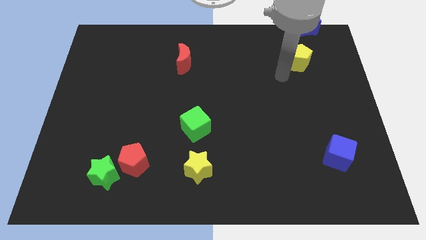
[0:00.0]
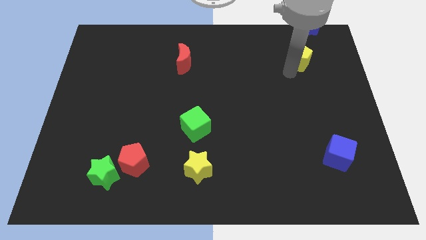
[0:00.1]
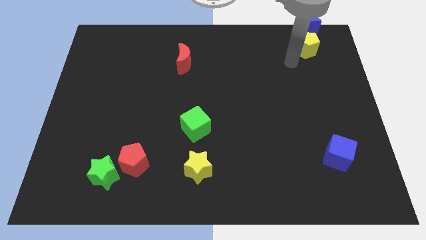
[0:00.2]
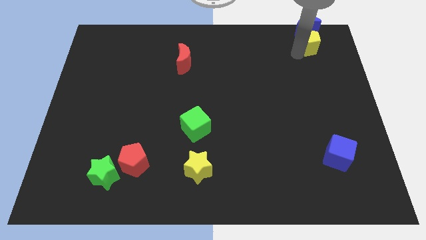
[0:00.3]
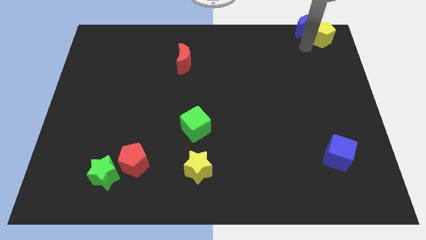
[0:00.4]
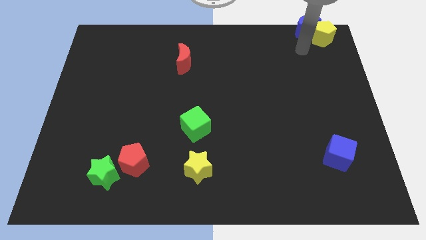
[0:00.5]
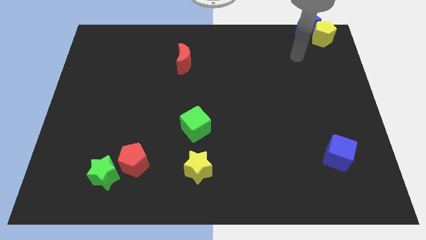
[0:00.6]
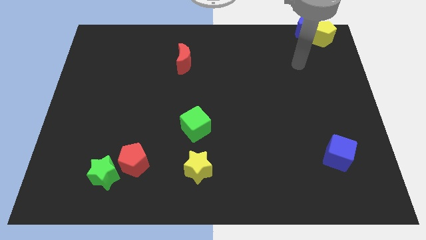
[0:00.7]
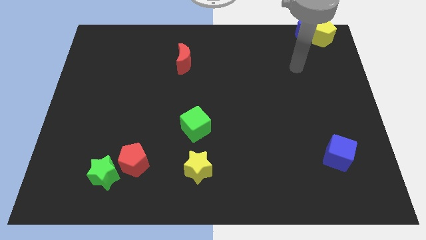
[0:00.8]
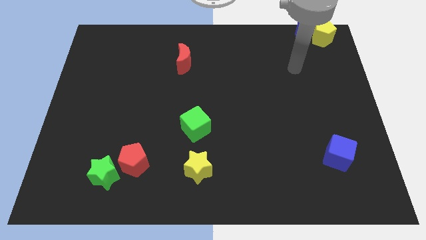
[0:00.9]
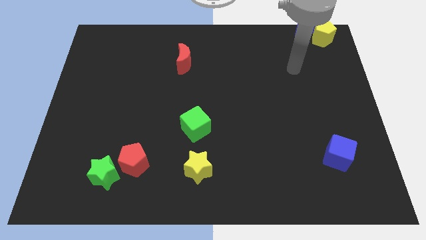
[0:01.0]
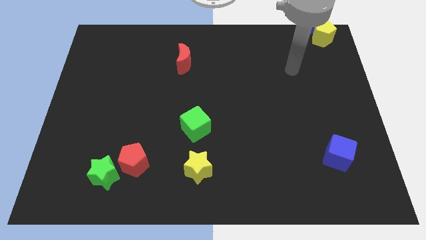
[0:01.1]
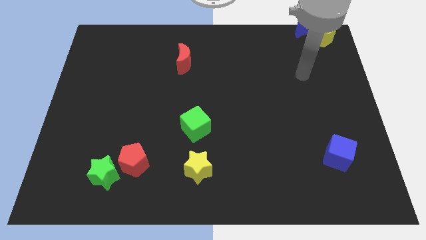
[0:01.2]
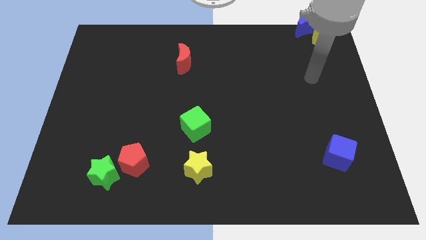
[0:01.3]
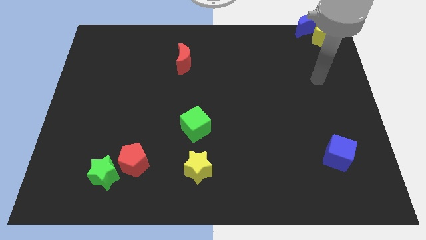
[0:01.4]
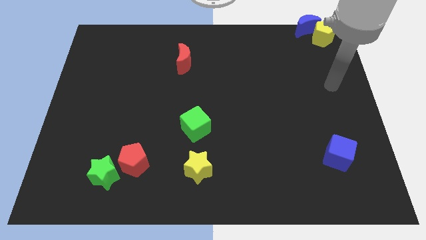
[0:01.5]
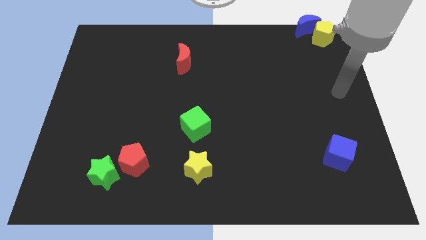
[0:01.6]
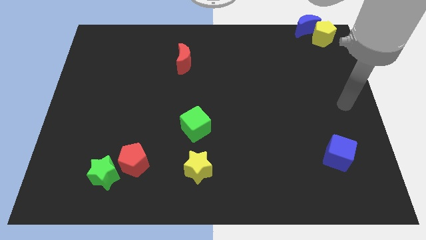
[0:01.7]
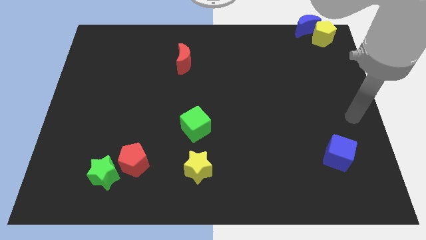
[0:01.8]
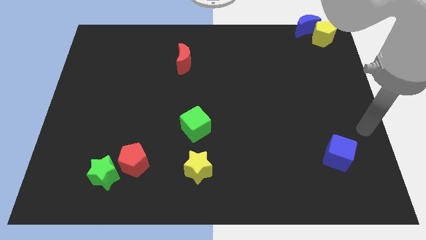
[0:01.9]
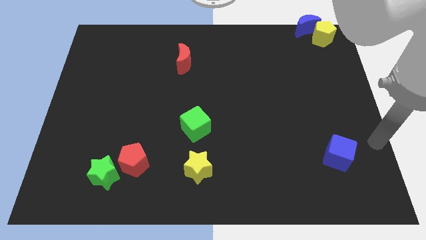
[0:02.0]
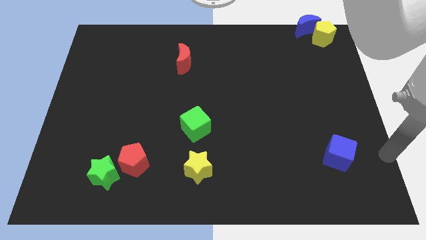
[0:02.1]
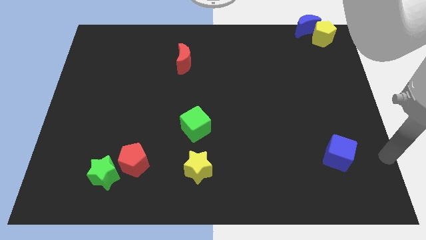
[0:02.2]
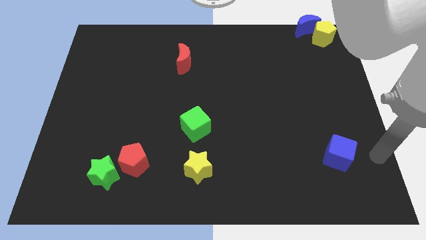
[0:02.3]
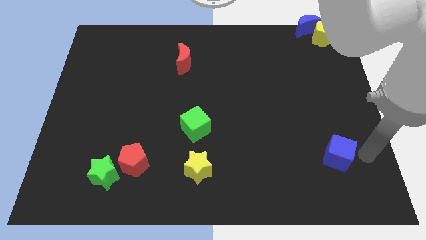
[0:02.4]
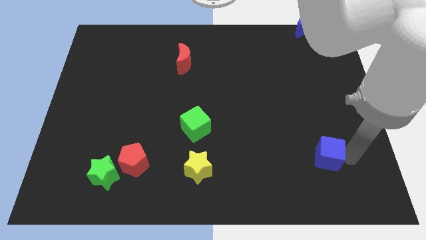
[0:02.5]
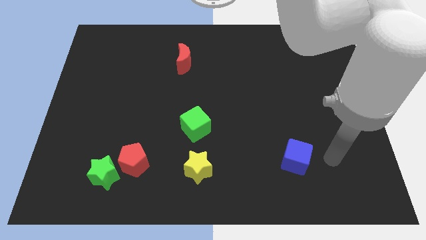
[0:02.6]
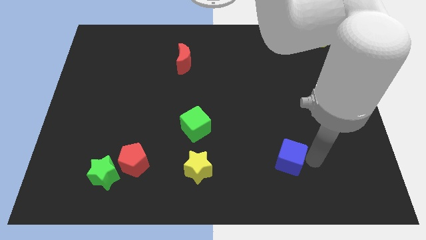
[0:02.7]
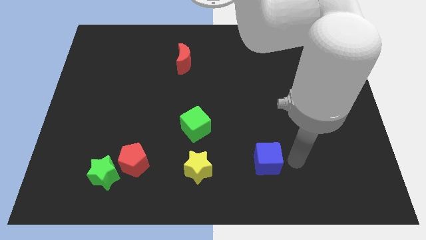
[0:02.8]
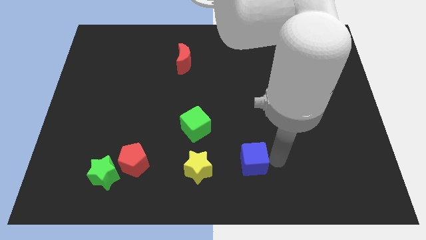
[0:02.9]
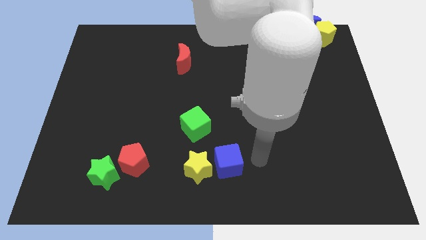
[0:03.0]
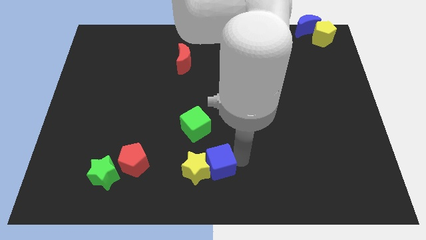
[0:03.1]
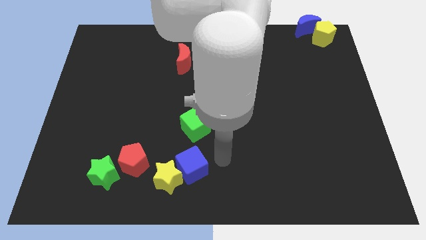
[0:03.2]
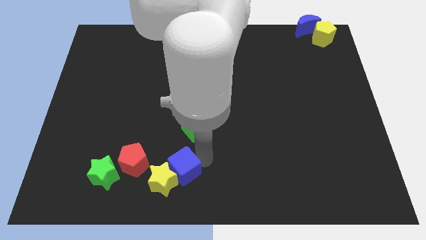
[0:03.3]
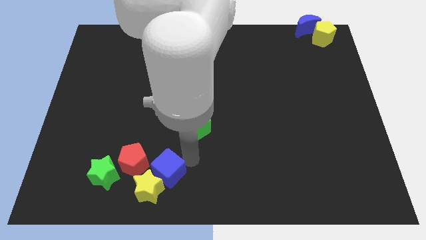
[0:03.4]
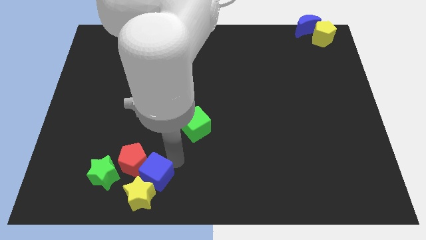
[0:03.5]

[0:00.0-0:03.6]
move blue cube diagonally above yellow star

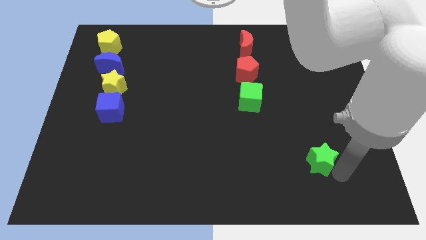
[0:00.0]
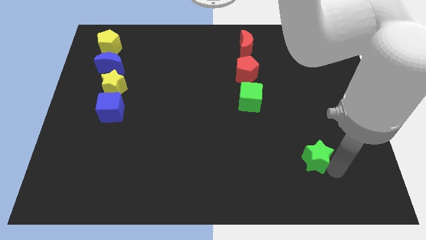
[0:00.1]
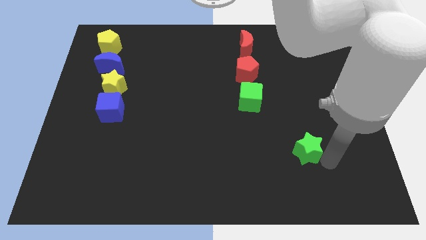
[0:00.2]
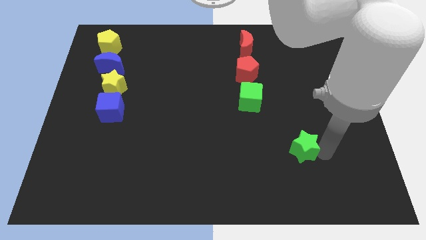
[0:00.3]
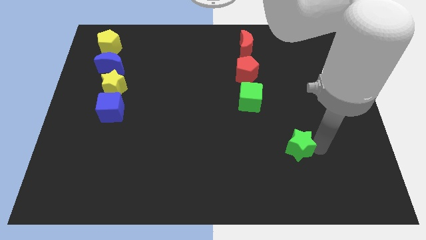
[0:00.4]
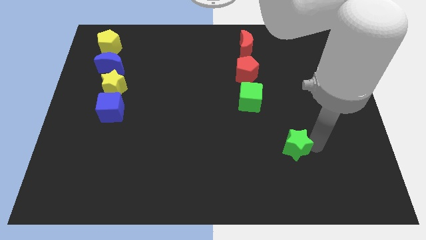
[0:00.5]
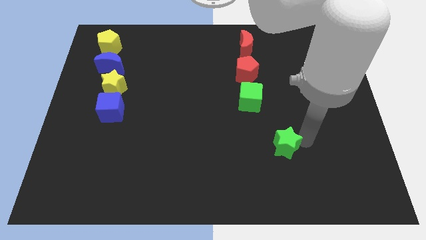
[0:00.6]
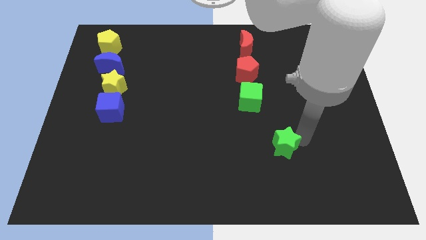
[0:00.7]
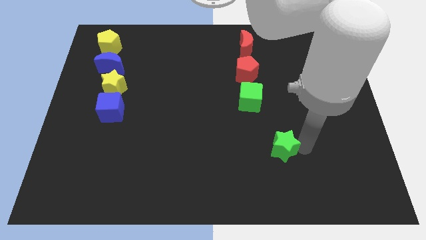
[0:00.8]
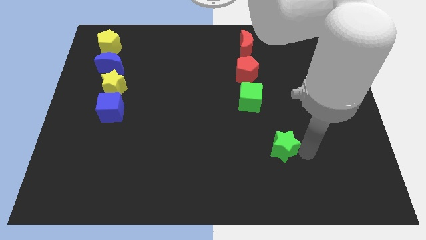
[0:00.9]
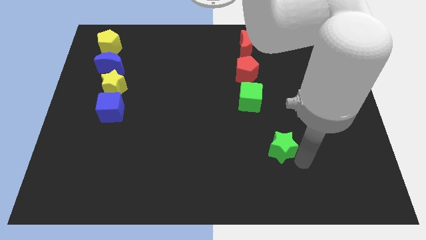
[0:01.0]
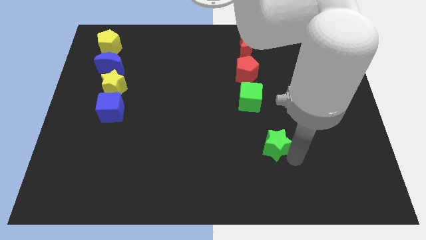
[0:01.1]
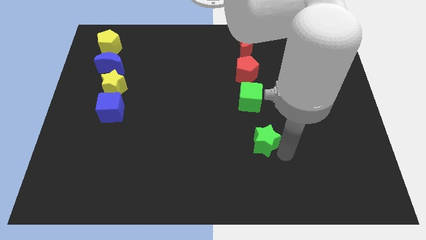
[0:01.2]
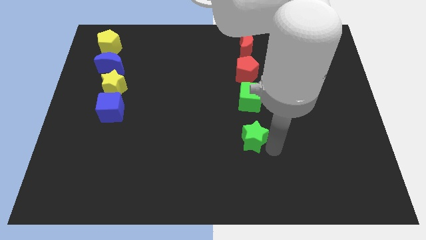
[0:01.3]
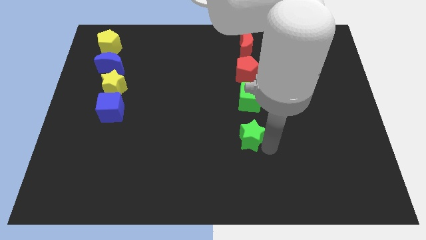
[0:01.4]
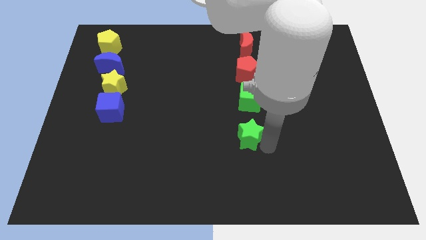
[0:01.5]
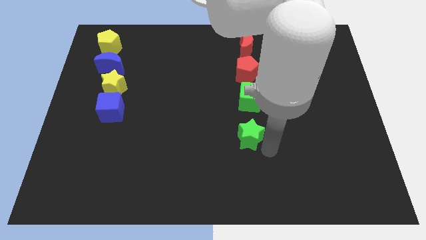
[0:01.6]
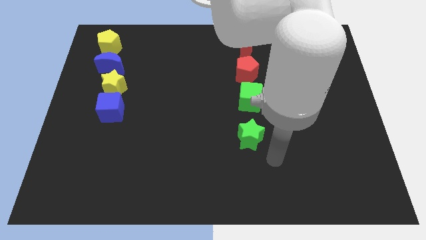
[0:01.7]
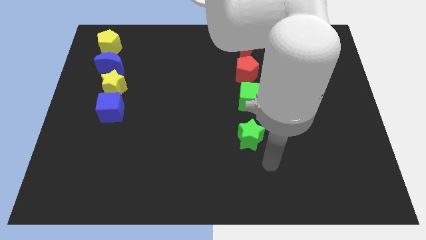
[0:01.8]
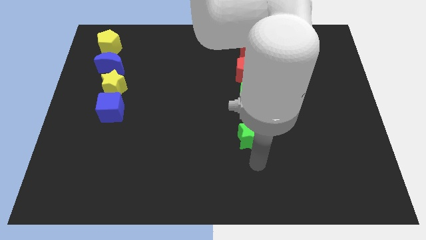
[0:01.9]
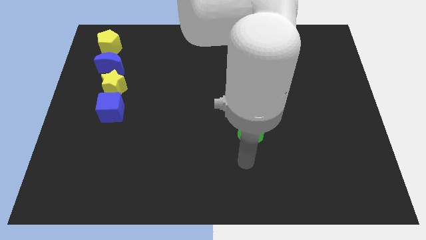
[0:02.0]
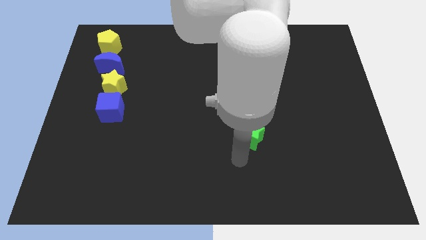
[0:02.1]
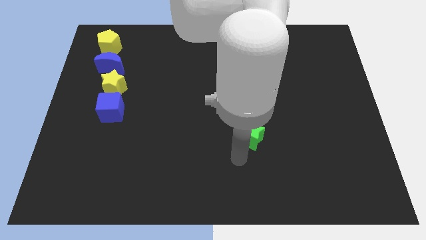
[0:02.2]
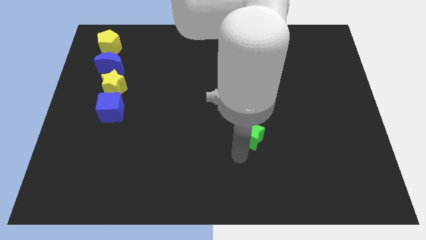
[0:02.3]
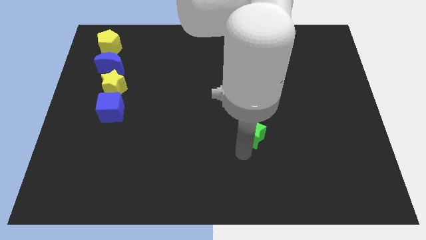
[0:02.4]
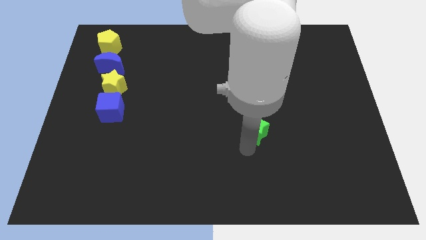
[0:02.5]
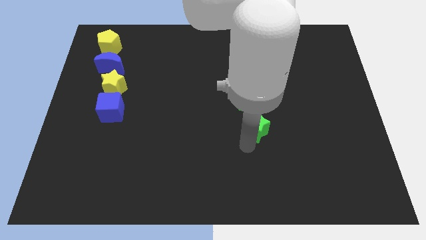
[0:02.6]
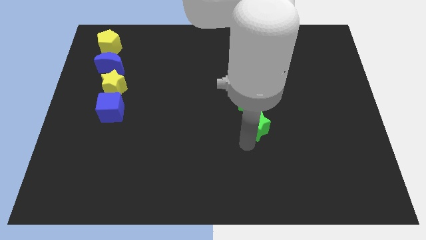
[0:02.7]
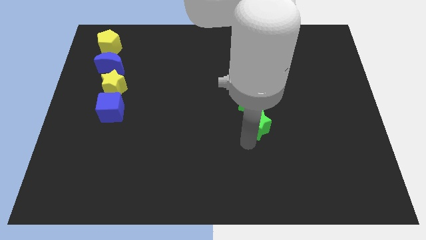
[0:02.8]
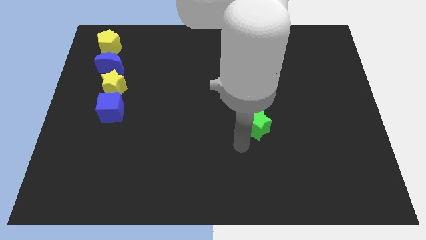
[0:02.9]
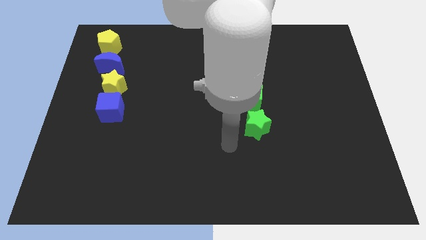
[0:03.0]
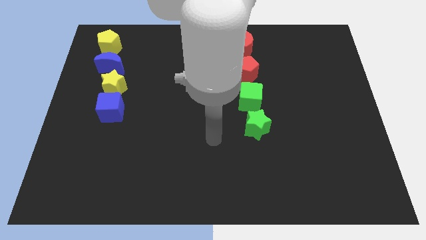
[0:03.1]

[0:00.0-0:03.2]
place the green star below the green cube

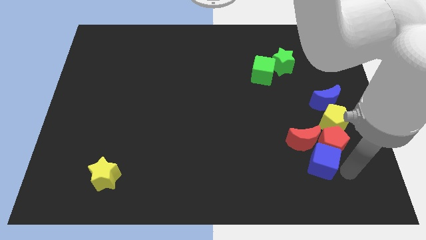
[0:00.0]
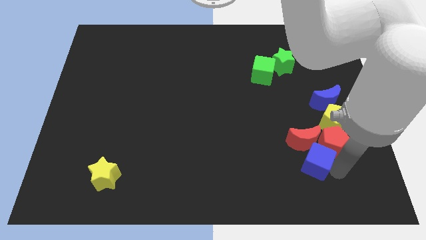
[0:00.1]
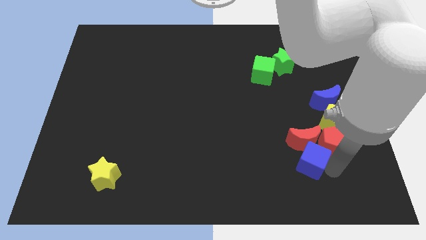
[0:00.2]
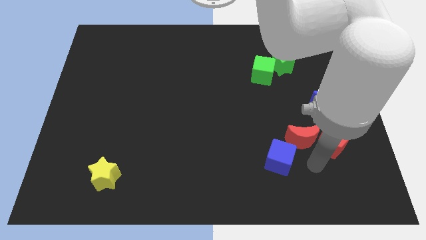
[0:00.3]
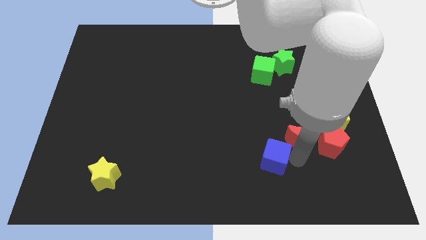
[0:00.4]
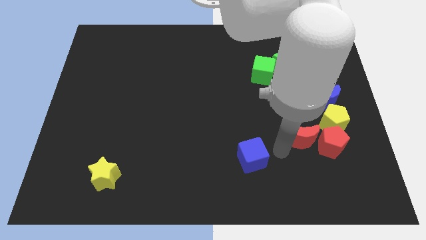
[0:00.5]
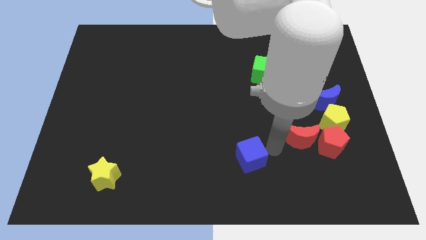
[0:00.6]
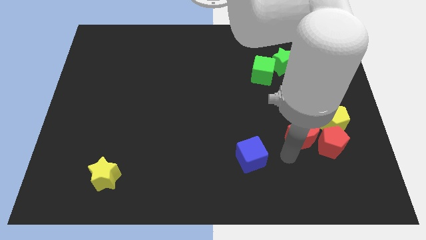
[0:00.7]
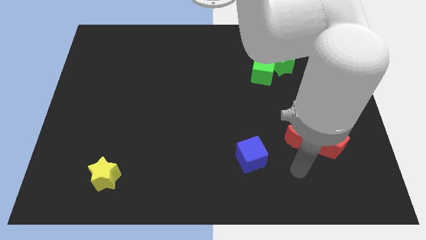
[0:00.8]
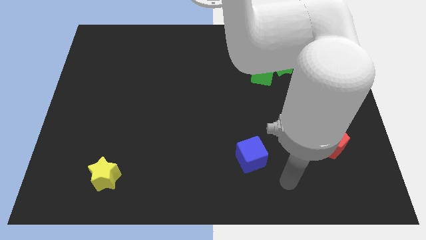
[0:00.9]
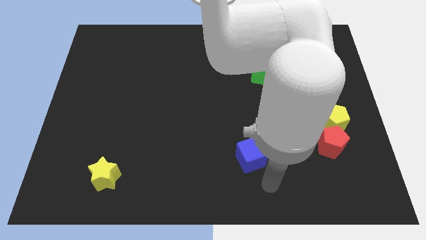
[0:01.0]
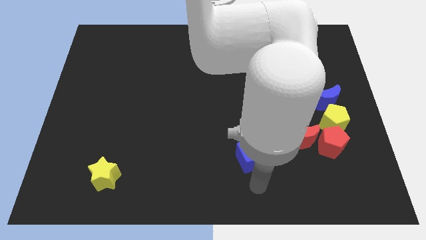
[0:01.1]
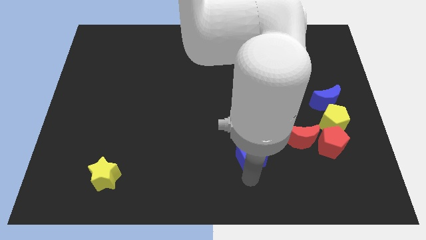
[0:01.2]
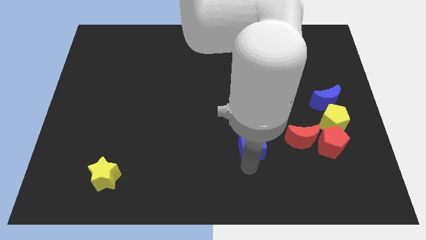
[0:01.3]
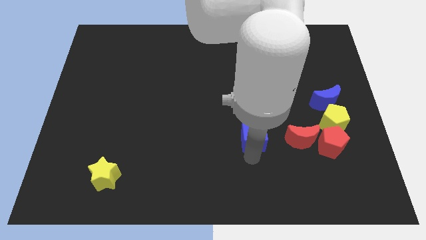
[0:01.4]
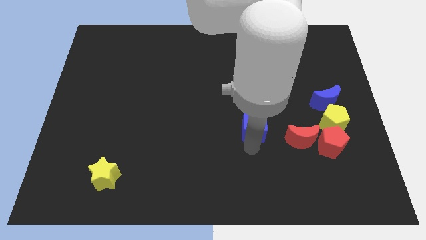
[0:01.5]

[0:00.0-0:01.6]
separate blue cube from the red pentagon

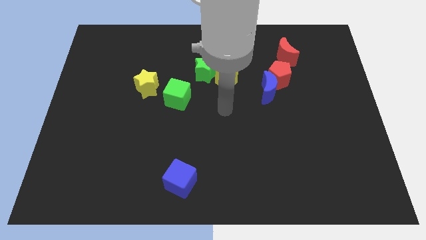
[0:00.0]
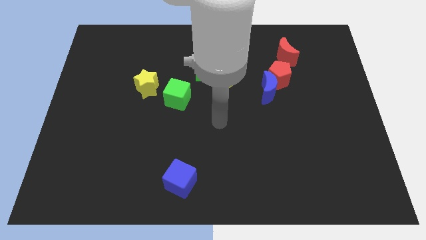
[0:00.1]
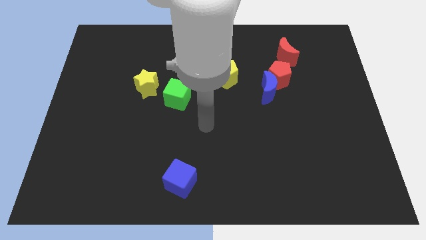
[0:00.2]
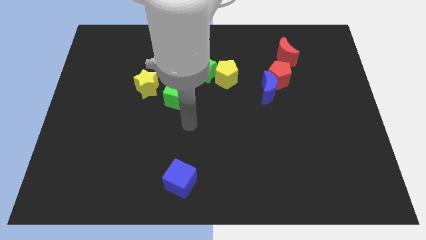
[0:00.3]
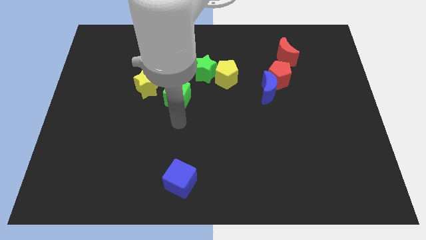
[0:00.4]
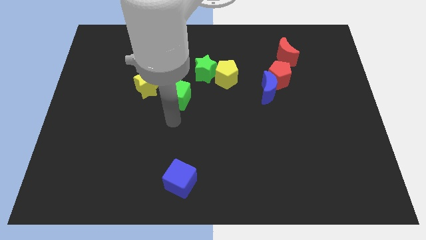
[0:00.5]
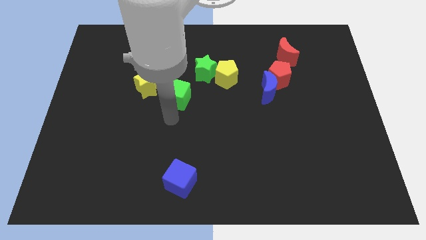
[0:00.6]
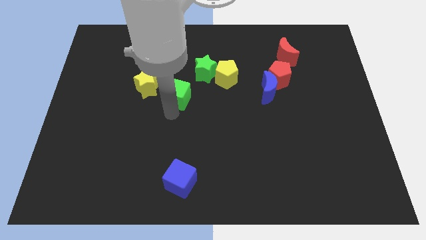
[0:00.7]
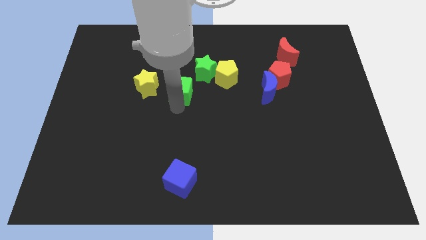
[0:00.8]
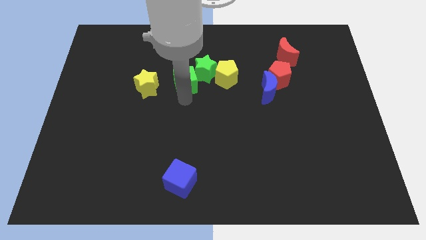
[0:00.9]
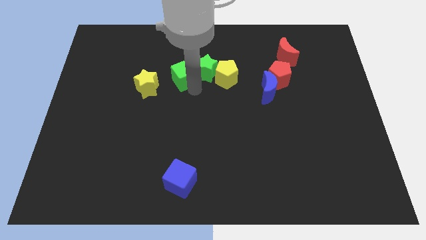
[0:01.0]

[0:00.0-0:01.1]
slide the green cube into the green star
